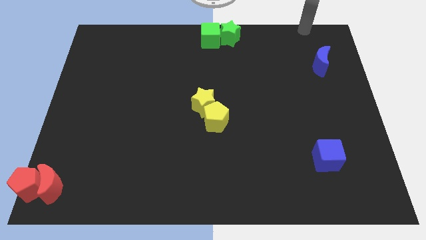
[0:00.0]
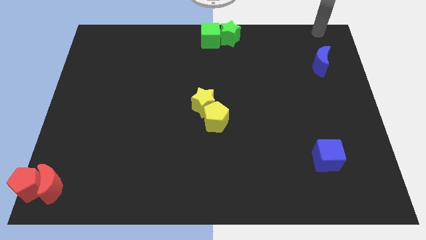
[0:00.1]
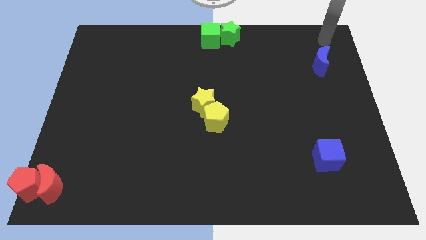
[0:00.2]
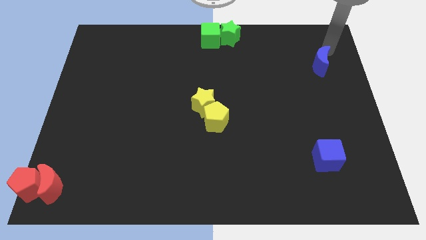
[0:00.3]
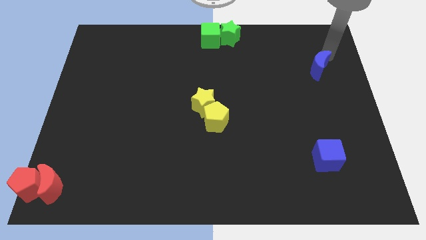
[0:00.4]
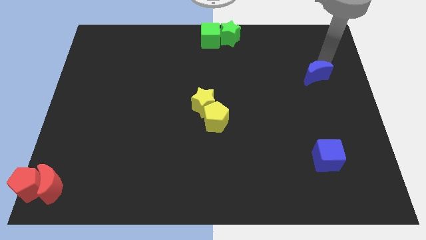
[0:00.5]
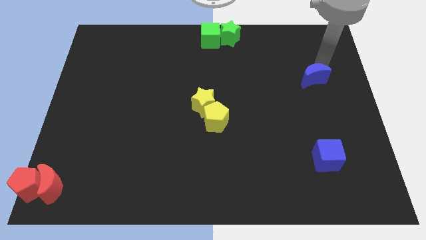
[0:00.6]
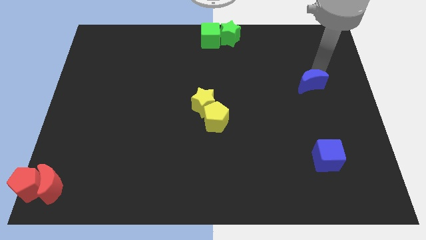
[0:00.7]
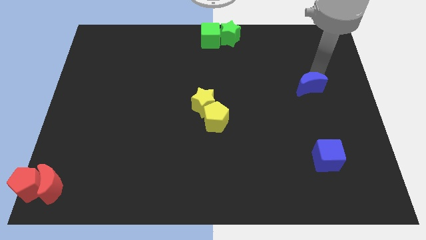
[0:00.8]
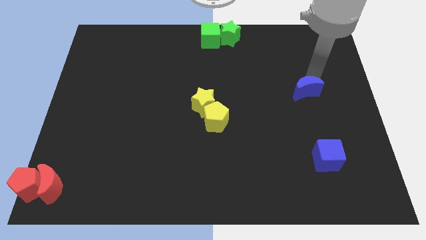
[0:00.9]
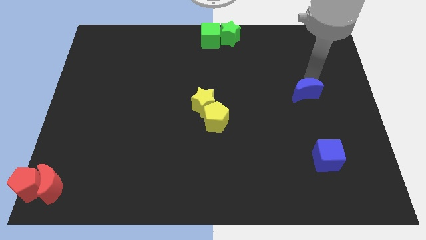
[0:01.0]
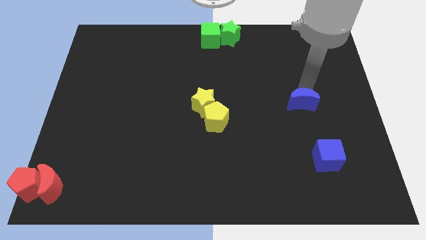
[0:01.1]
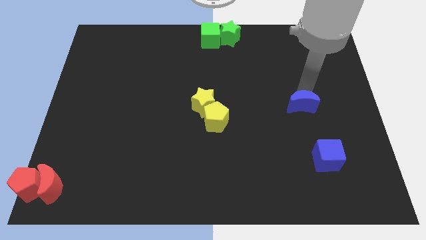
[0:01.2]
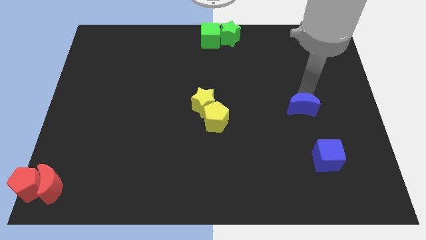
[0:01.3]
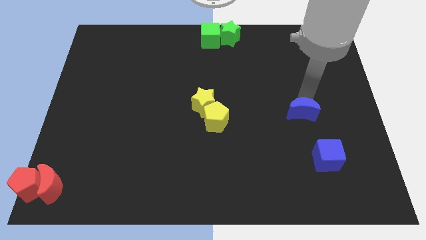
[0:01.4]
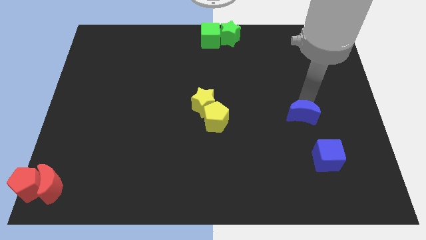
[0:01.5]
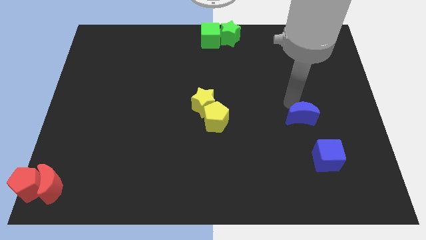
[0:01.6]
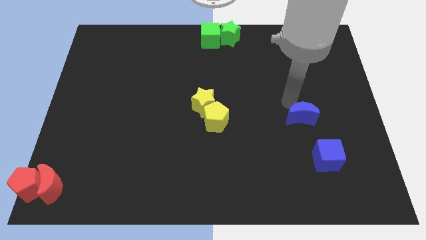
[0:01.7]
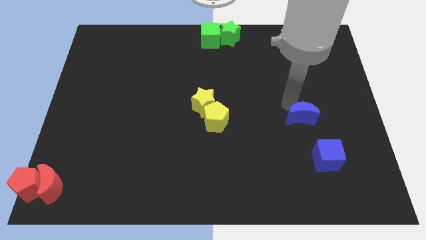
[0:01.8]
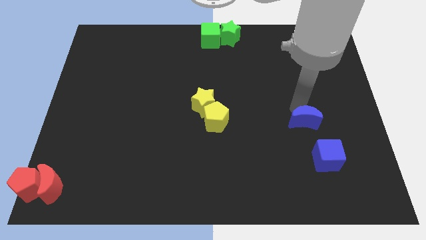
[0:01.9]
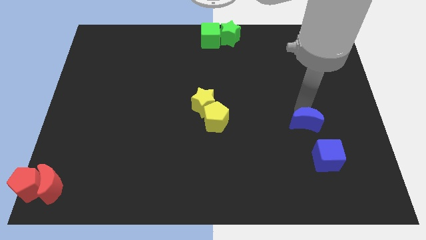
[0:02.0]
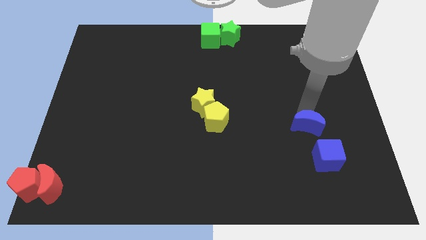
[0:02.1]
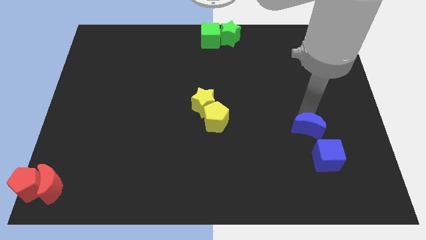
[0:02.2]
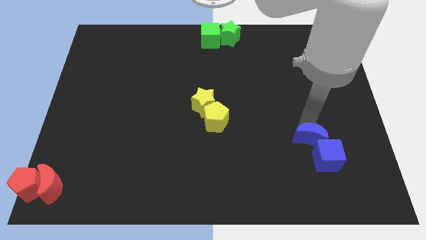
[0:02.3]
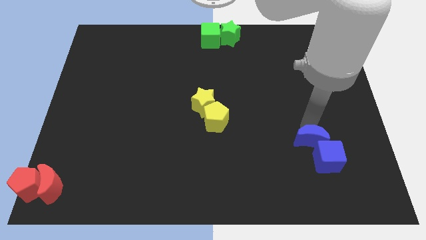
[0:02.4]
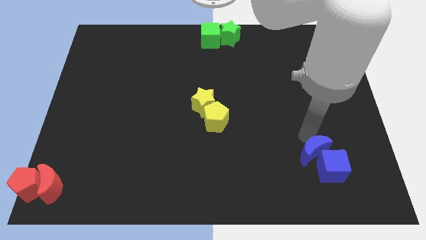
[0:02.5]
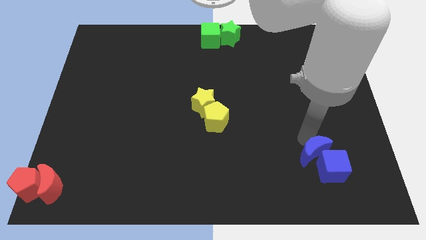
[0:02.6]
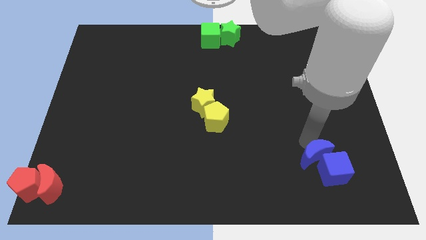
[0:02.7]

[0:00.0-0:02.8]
push the blue moon into blue cube

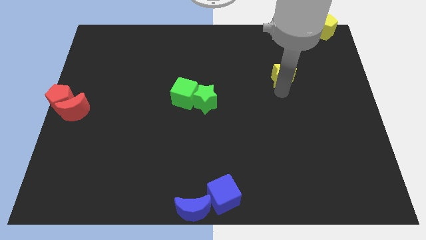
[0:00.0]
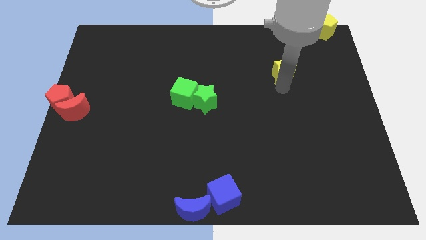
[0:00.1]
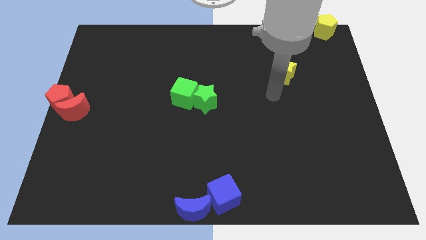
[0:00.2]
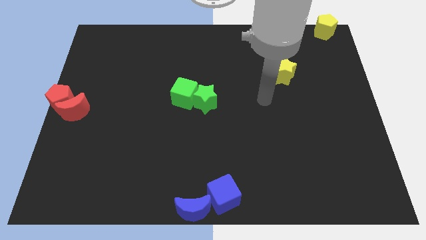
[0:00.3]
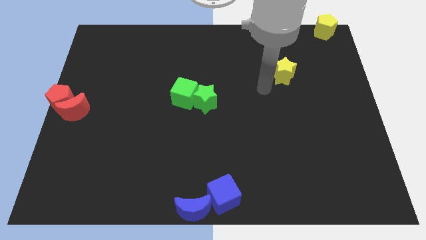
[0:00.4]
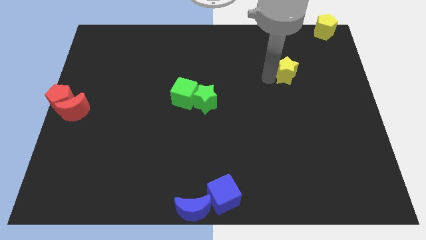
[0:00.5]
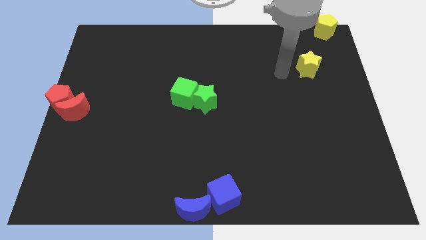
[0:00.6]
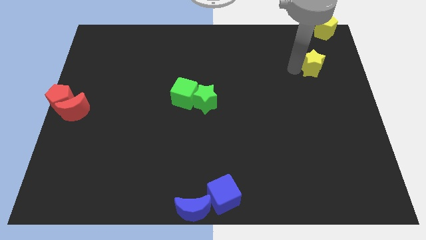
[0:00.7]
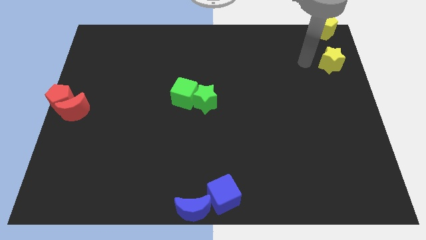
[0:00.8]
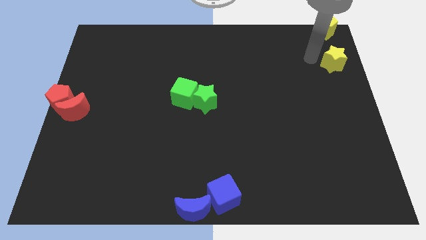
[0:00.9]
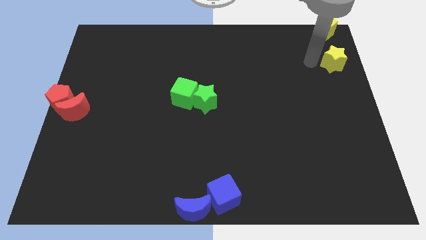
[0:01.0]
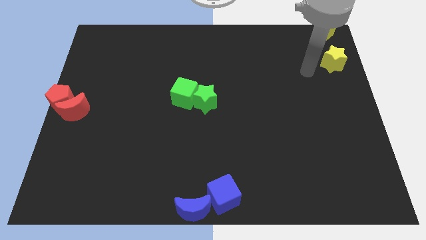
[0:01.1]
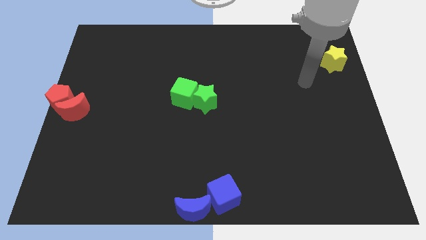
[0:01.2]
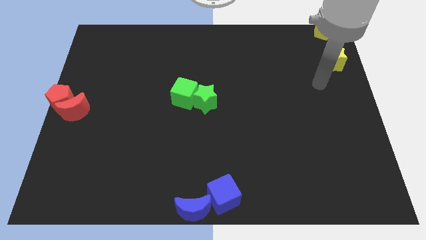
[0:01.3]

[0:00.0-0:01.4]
push the yellow star below the yellow pentagon

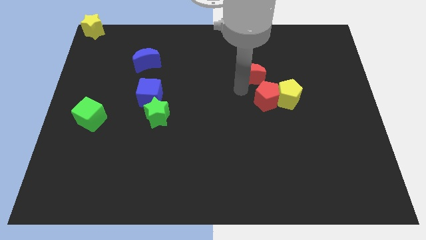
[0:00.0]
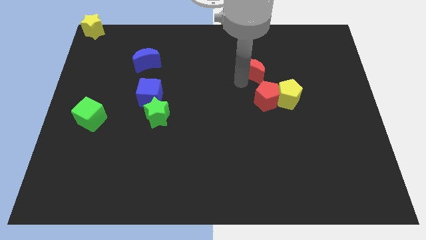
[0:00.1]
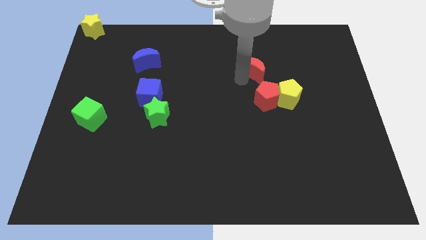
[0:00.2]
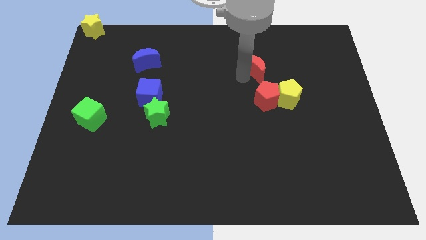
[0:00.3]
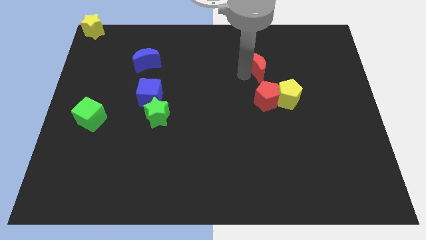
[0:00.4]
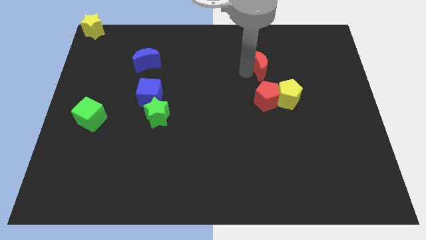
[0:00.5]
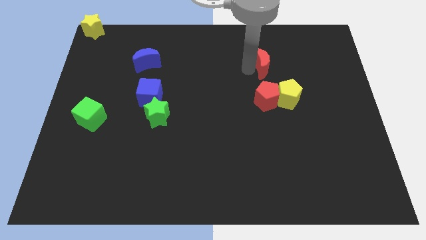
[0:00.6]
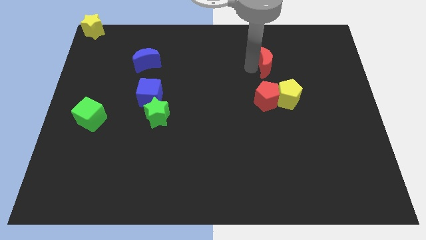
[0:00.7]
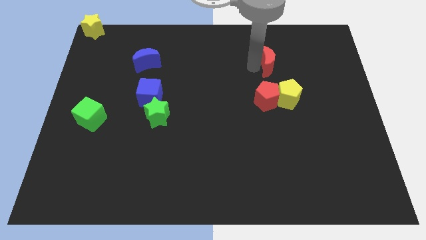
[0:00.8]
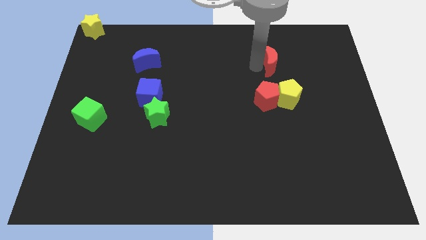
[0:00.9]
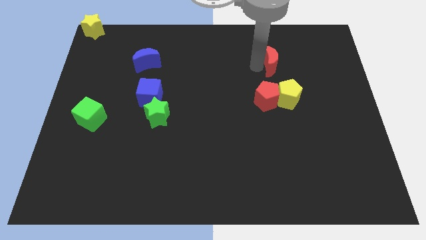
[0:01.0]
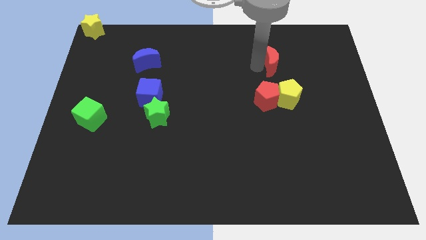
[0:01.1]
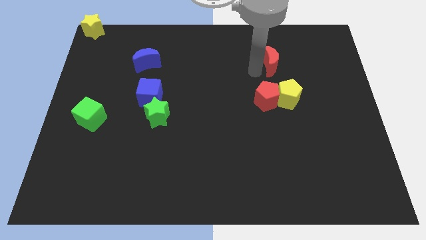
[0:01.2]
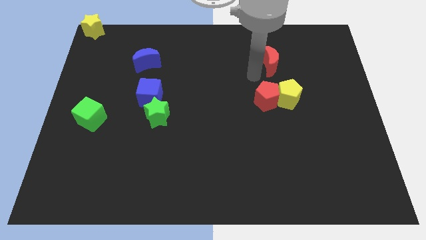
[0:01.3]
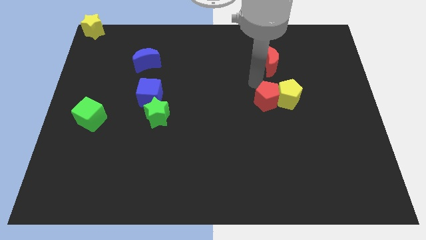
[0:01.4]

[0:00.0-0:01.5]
place the red moon above the red and yellow pentagon

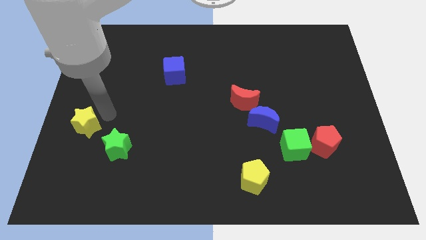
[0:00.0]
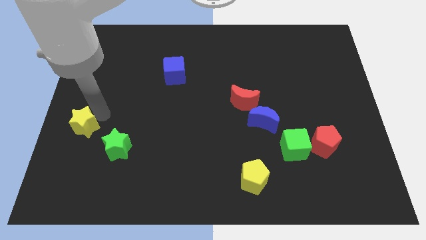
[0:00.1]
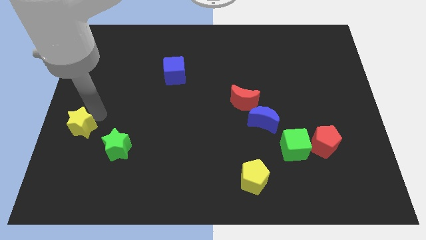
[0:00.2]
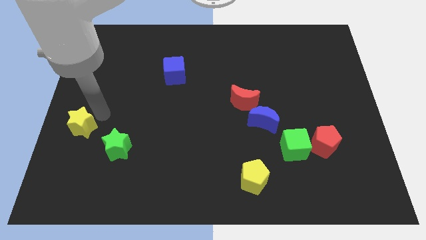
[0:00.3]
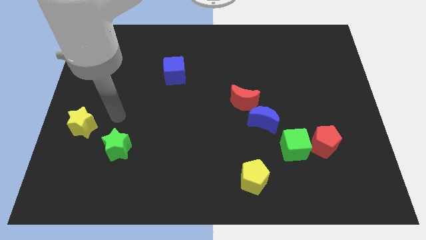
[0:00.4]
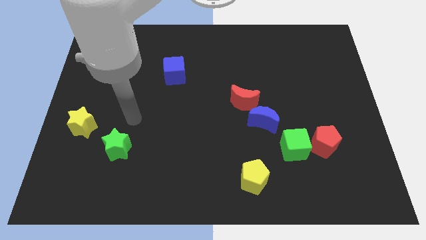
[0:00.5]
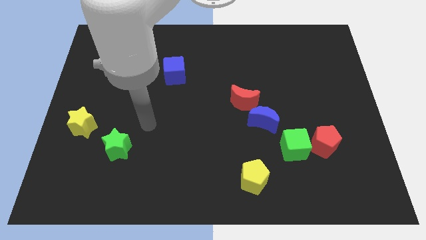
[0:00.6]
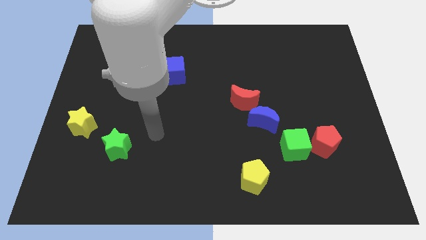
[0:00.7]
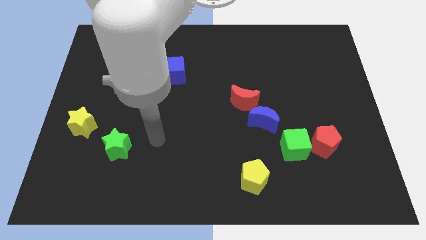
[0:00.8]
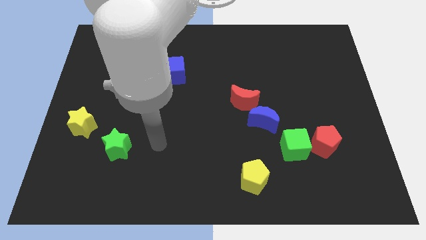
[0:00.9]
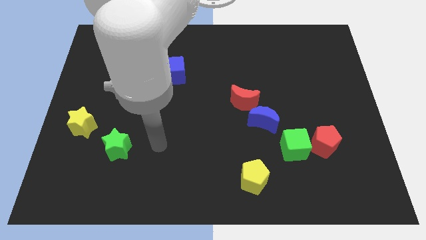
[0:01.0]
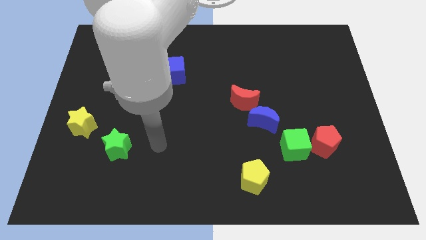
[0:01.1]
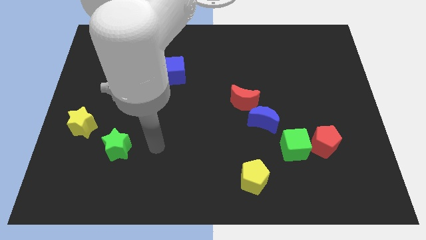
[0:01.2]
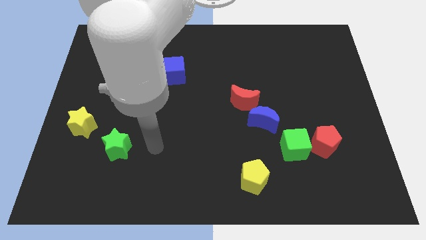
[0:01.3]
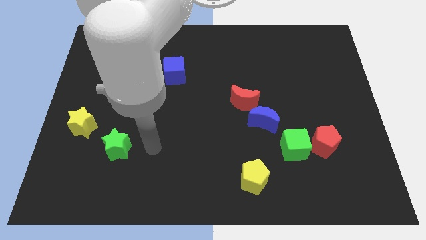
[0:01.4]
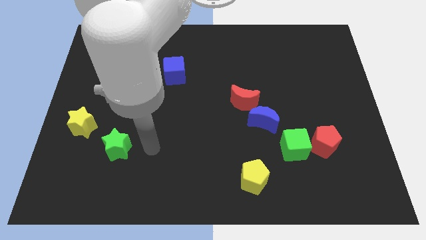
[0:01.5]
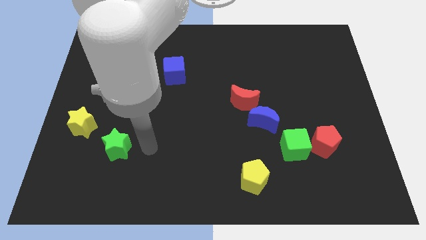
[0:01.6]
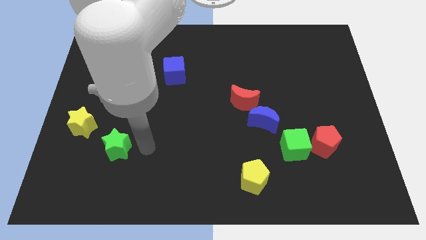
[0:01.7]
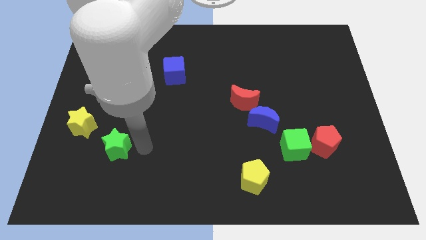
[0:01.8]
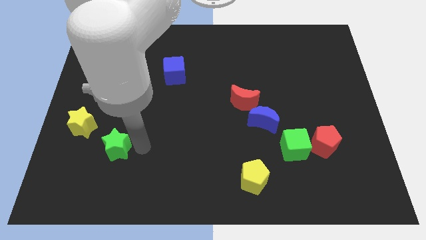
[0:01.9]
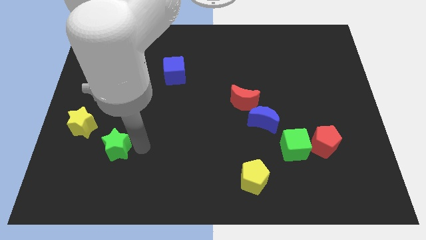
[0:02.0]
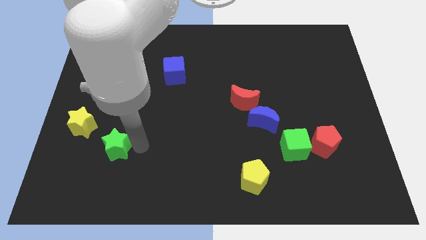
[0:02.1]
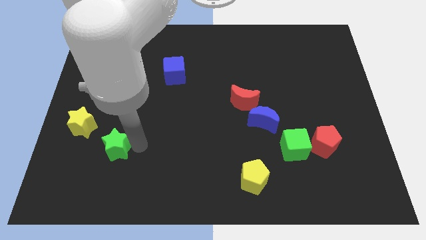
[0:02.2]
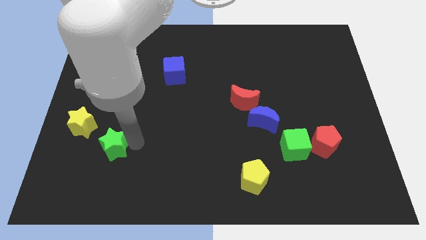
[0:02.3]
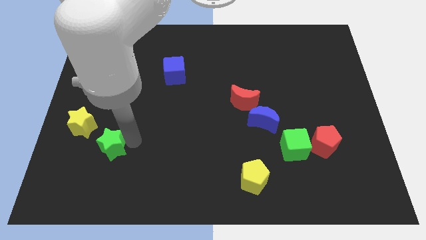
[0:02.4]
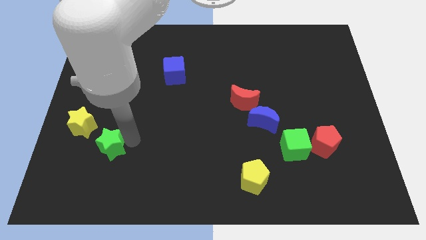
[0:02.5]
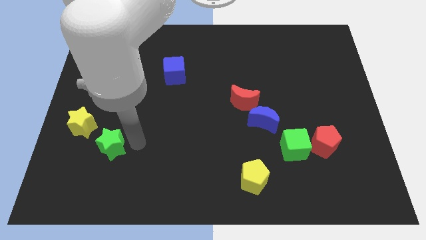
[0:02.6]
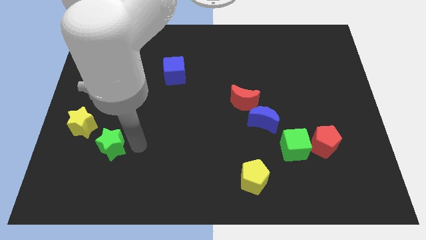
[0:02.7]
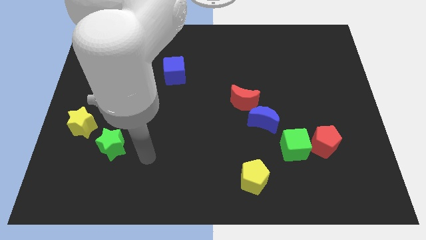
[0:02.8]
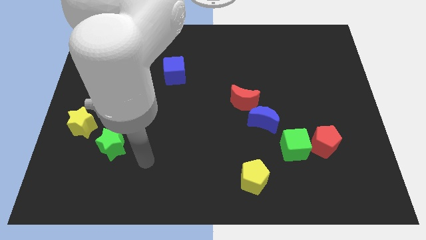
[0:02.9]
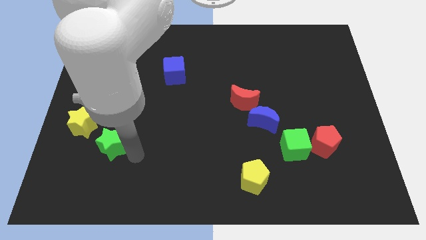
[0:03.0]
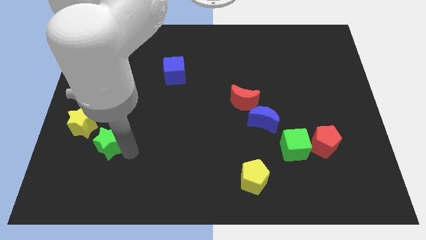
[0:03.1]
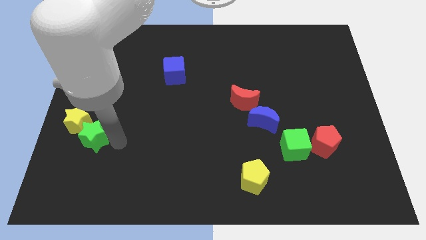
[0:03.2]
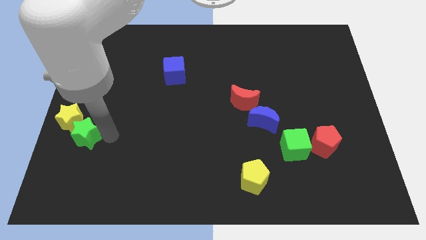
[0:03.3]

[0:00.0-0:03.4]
push green star in to yellow star
